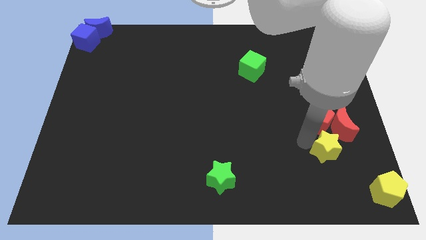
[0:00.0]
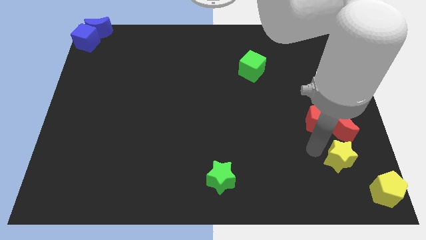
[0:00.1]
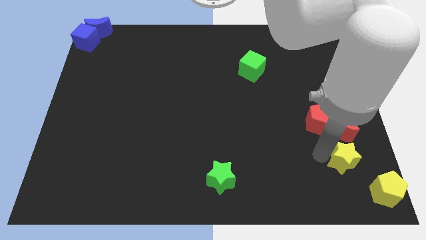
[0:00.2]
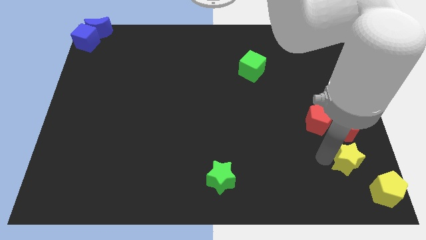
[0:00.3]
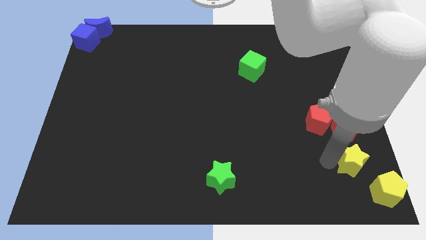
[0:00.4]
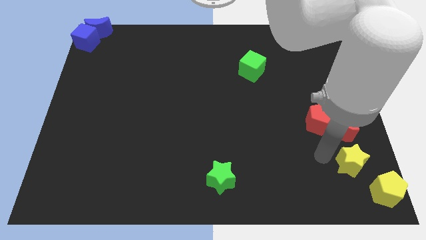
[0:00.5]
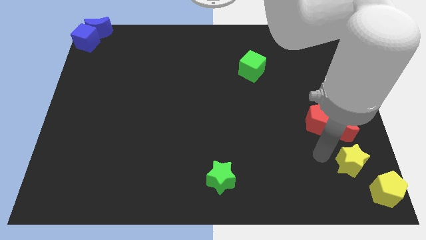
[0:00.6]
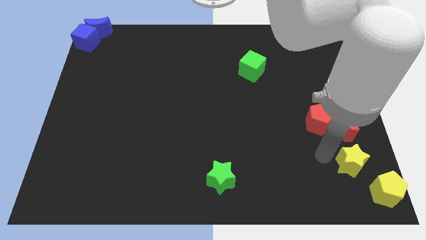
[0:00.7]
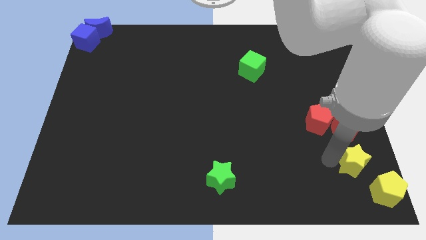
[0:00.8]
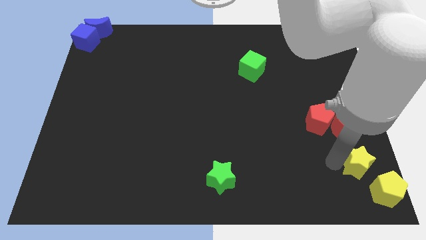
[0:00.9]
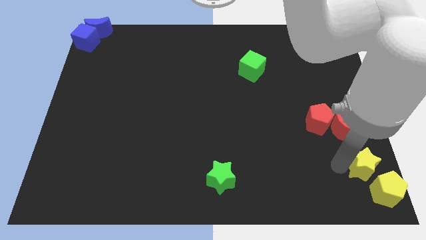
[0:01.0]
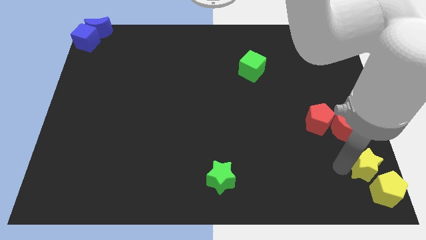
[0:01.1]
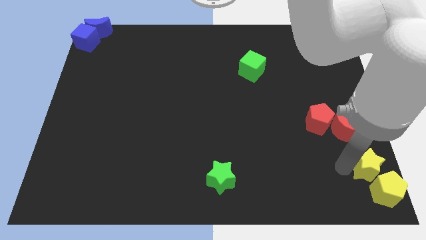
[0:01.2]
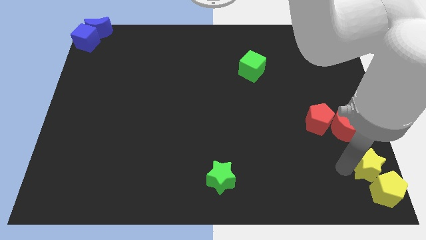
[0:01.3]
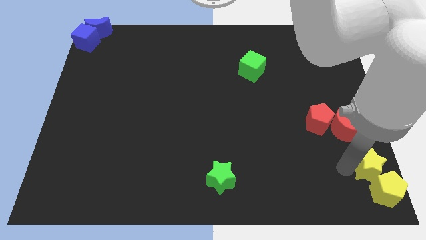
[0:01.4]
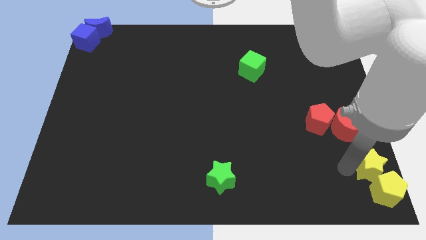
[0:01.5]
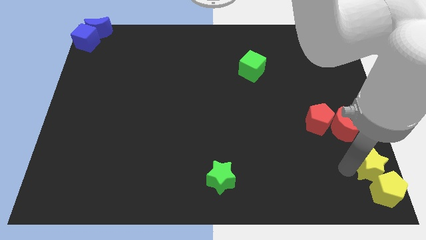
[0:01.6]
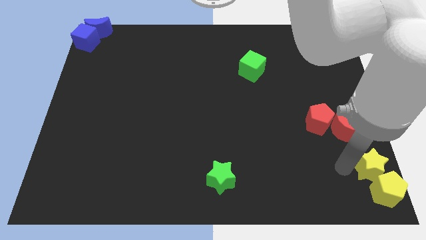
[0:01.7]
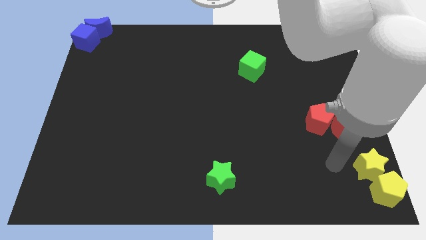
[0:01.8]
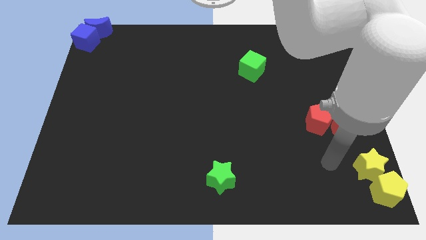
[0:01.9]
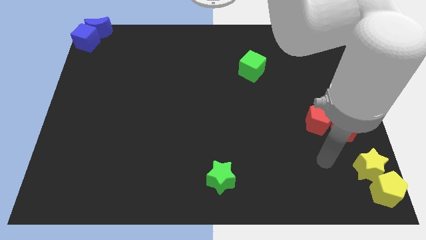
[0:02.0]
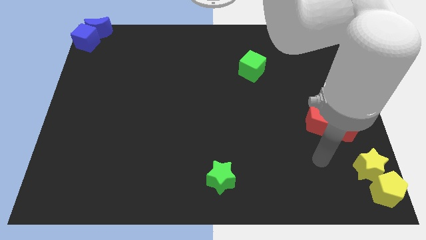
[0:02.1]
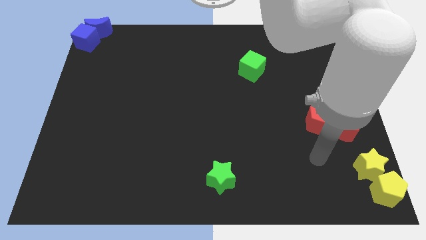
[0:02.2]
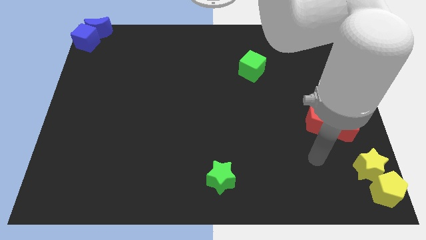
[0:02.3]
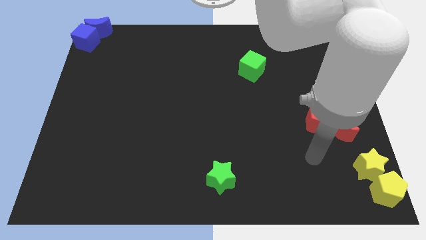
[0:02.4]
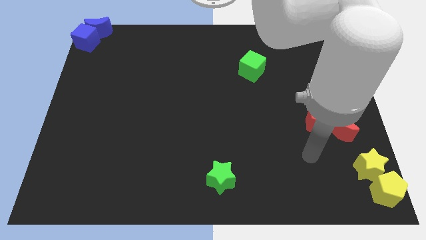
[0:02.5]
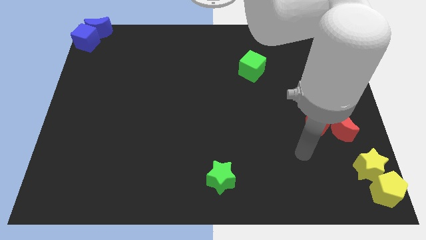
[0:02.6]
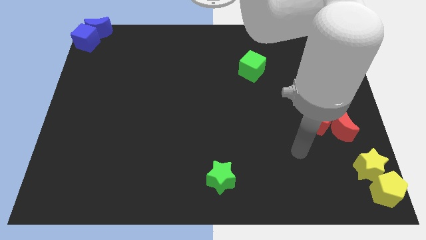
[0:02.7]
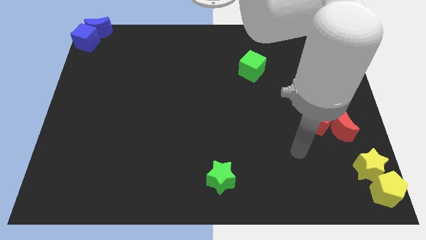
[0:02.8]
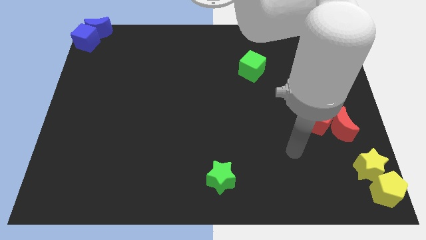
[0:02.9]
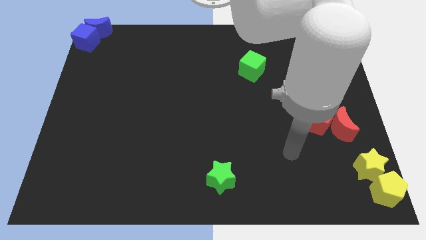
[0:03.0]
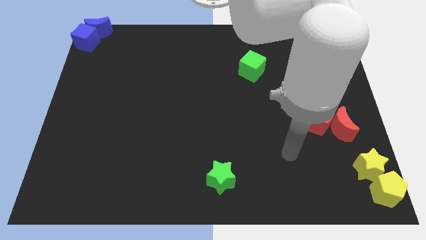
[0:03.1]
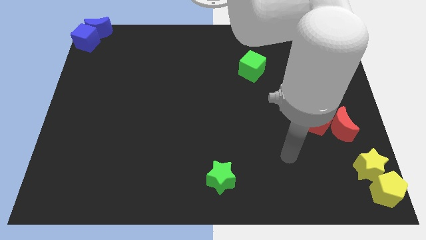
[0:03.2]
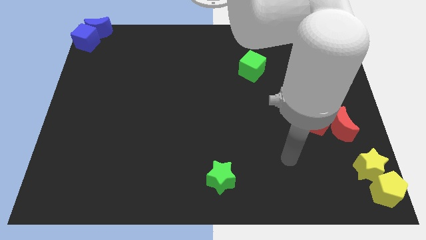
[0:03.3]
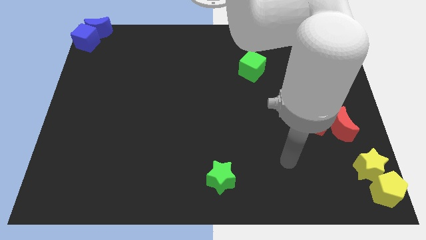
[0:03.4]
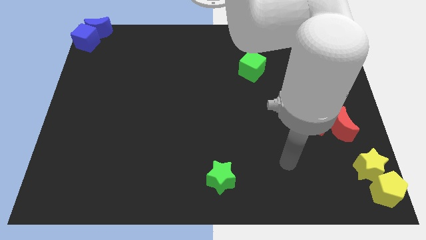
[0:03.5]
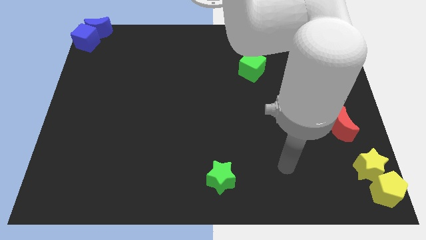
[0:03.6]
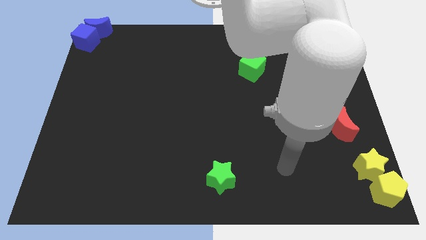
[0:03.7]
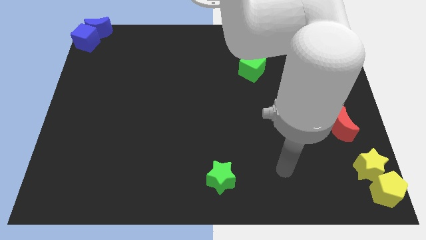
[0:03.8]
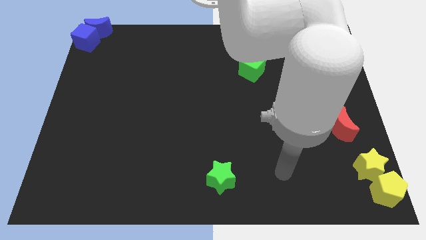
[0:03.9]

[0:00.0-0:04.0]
move the yellow star away from the red blocks

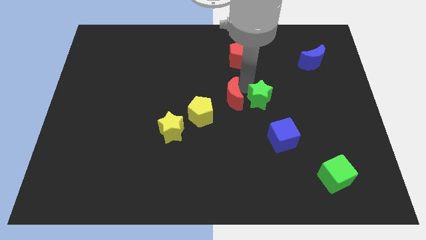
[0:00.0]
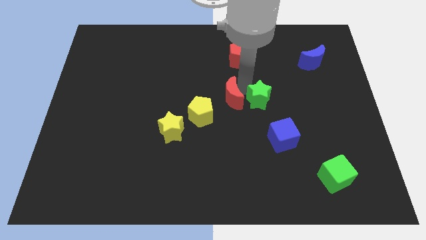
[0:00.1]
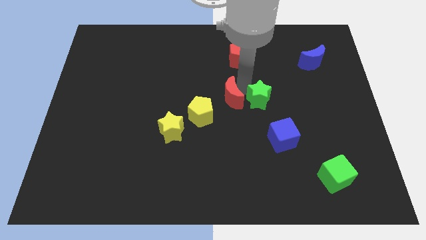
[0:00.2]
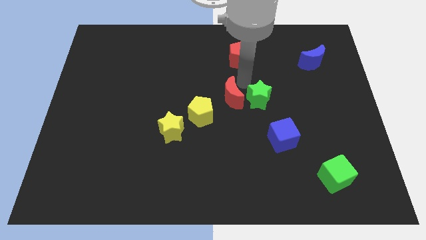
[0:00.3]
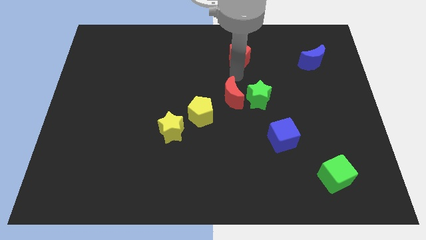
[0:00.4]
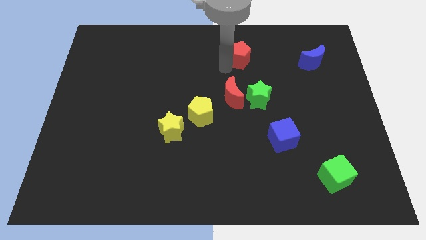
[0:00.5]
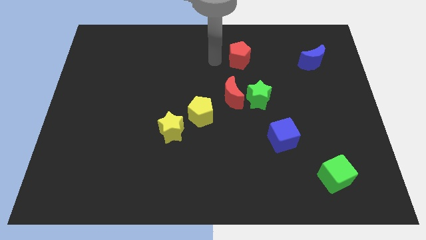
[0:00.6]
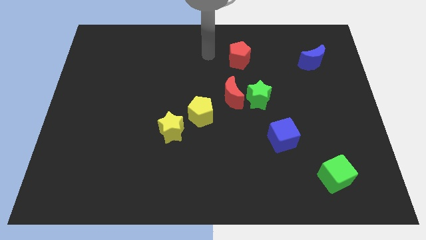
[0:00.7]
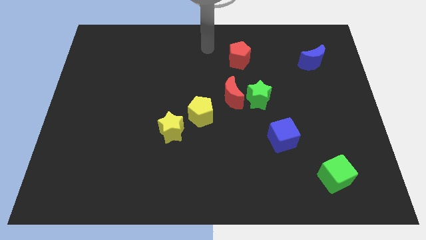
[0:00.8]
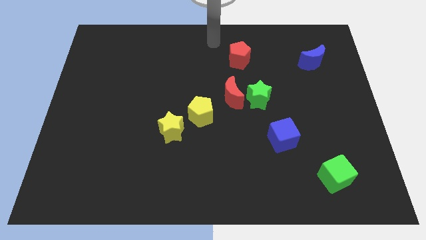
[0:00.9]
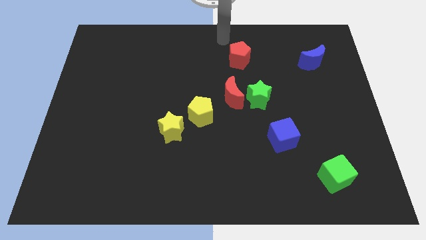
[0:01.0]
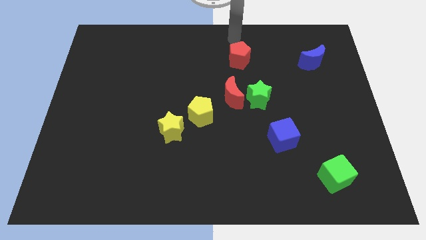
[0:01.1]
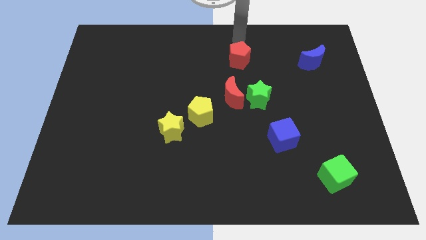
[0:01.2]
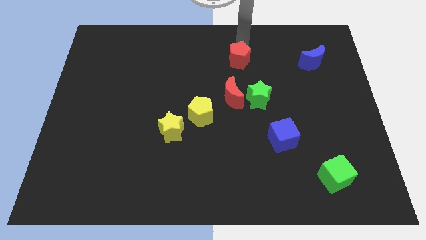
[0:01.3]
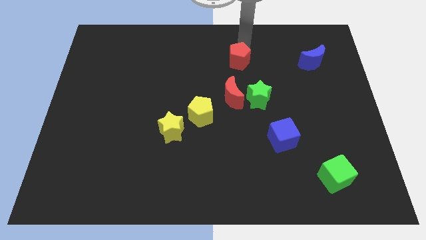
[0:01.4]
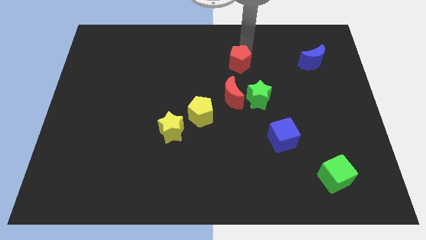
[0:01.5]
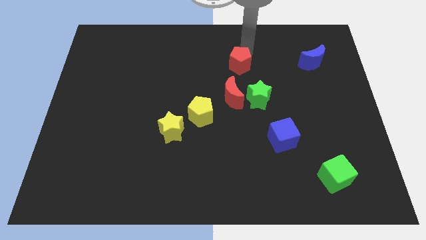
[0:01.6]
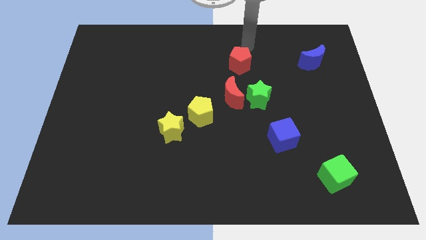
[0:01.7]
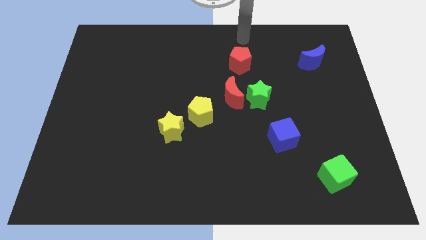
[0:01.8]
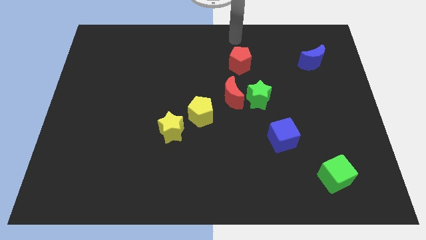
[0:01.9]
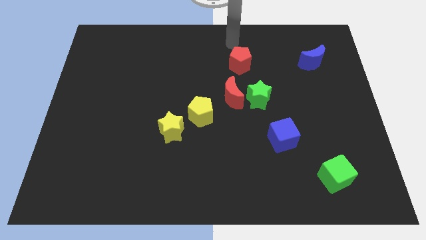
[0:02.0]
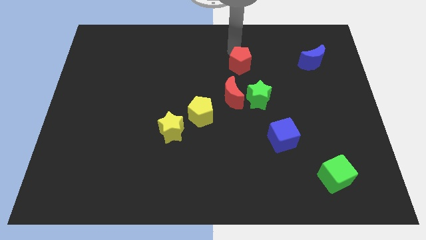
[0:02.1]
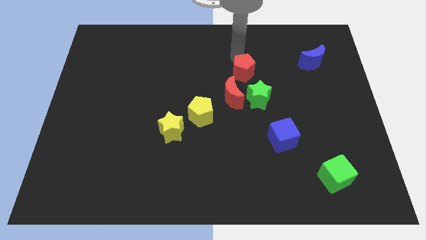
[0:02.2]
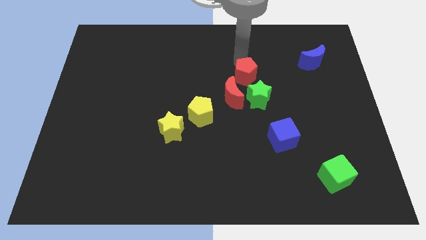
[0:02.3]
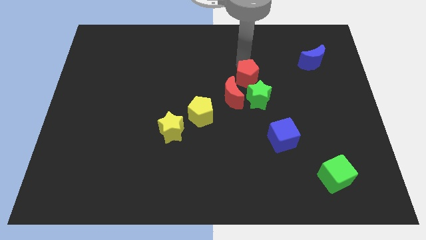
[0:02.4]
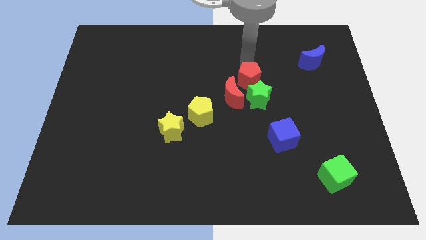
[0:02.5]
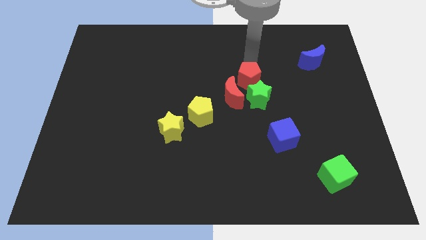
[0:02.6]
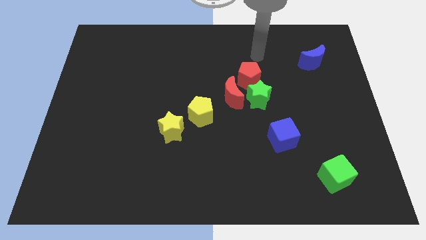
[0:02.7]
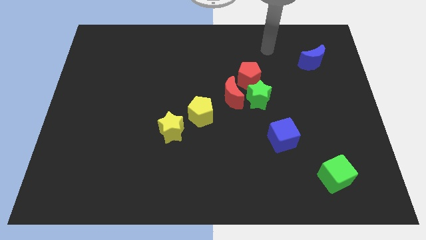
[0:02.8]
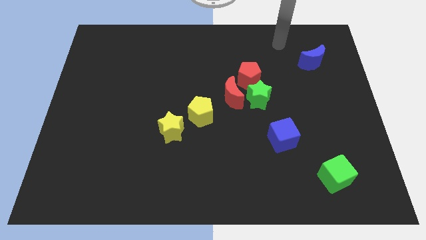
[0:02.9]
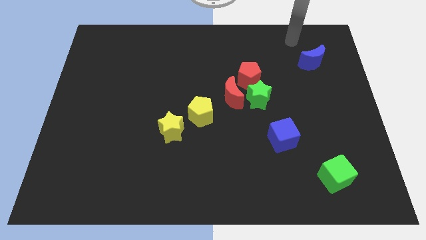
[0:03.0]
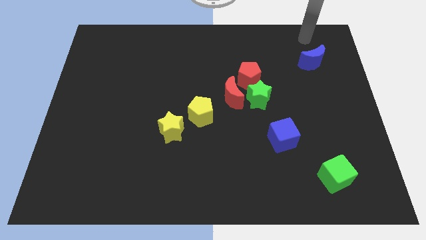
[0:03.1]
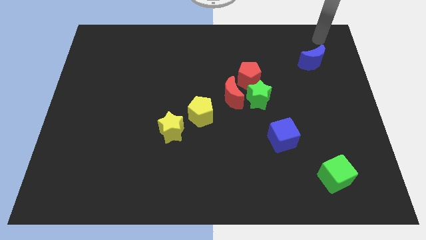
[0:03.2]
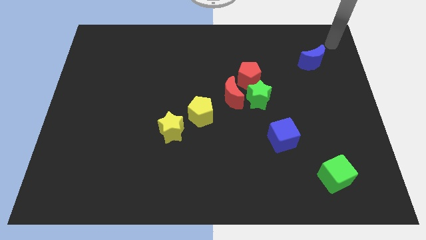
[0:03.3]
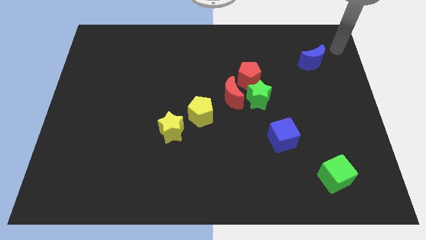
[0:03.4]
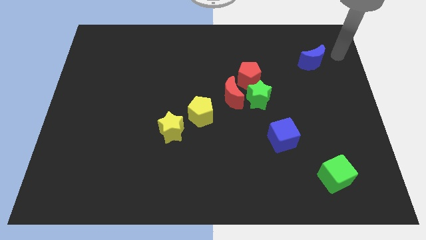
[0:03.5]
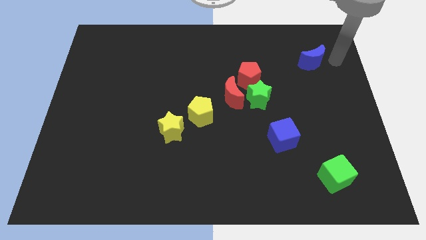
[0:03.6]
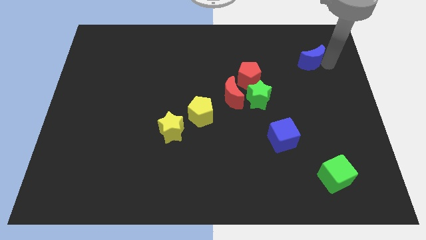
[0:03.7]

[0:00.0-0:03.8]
push the red pentagon downwards

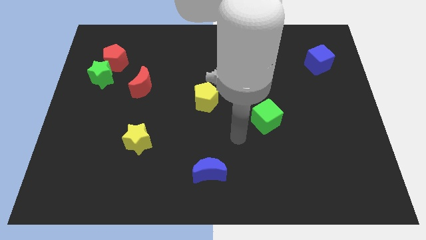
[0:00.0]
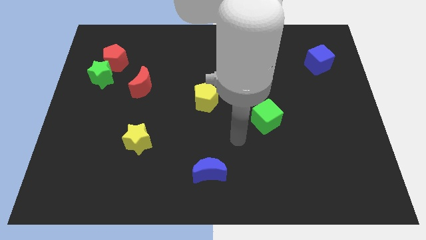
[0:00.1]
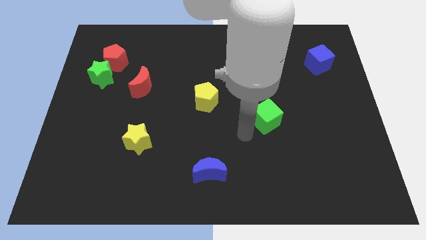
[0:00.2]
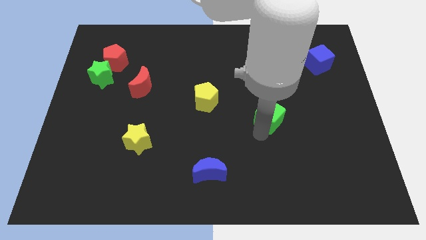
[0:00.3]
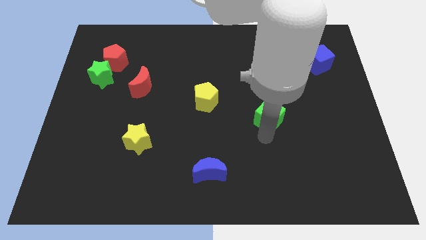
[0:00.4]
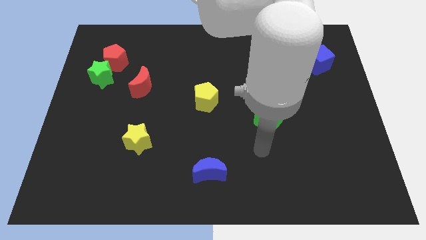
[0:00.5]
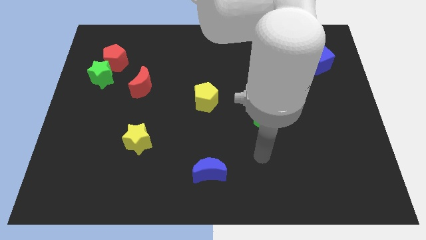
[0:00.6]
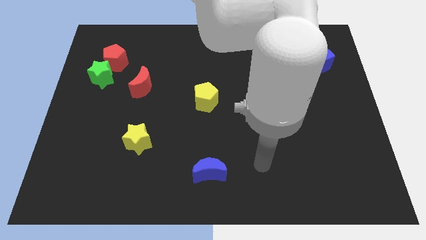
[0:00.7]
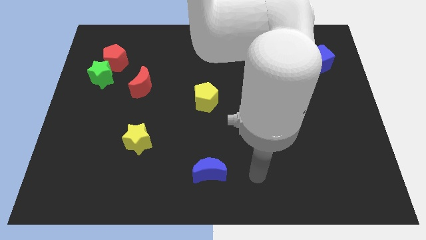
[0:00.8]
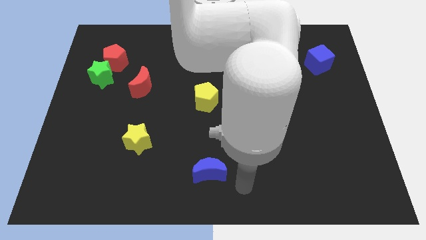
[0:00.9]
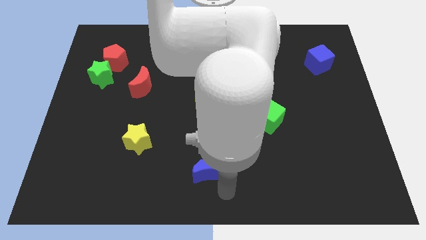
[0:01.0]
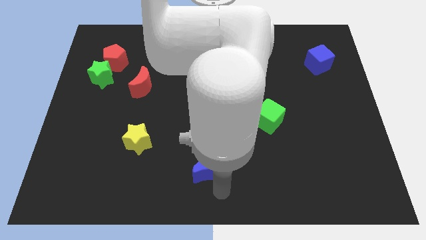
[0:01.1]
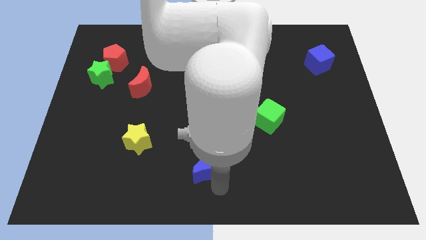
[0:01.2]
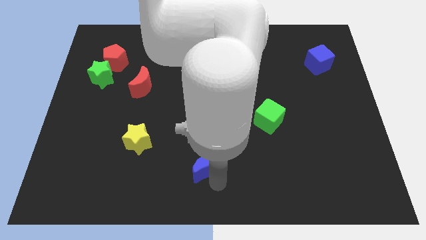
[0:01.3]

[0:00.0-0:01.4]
move the arm to the bottom side of the blue crescent
